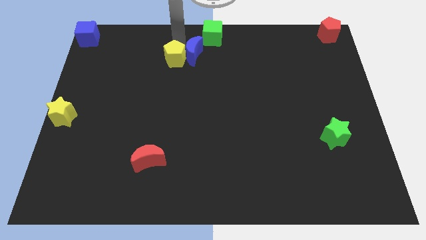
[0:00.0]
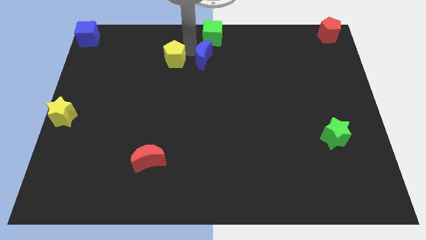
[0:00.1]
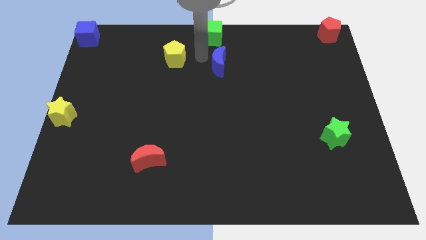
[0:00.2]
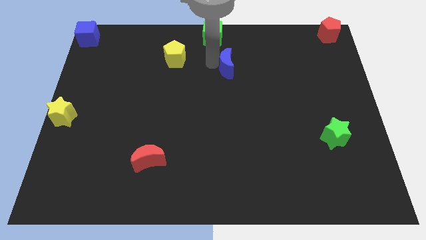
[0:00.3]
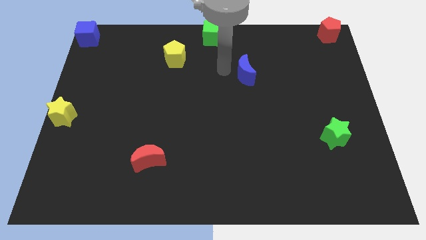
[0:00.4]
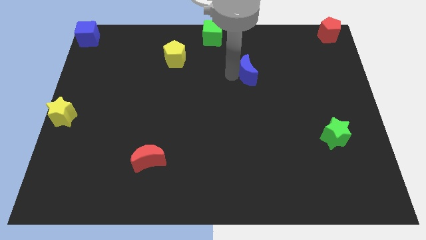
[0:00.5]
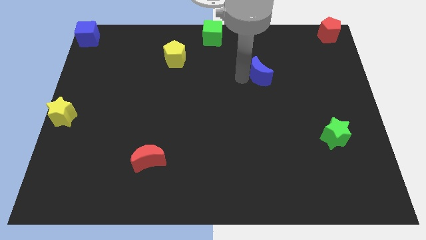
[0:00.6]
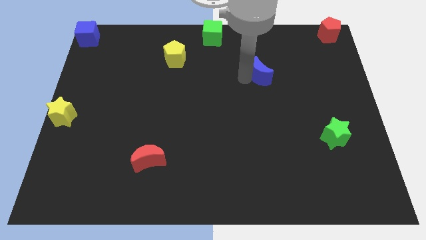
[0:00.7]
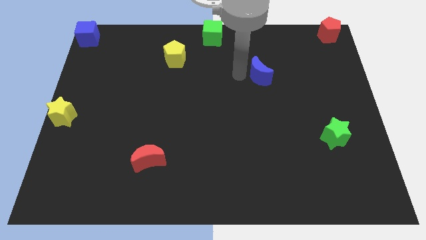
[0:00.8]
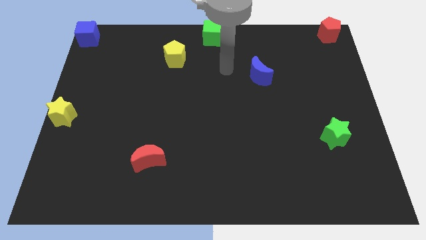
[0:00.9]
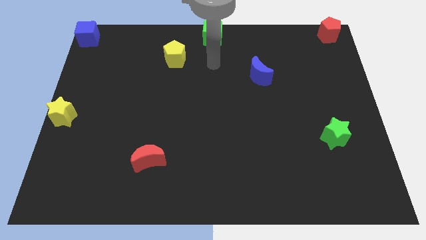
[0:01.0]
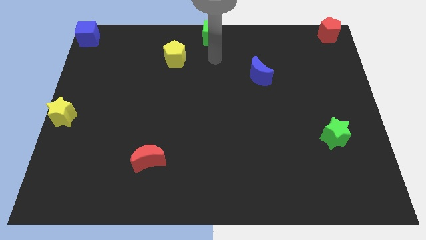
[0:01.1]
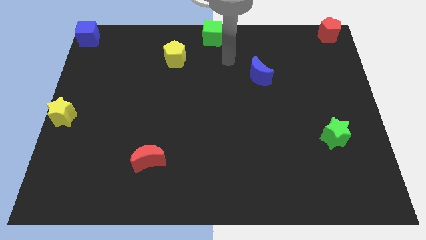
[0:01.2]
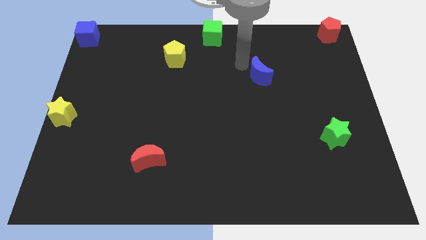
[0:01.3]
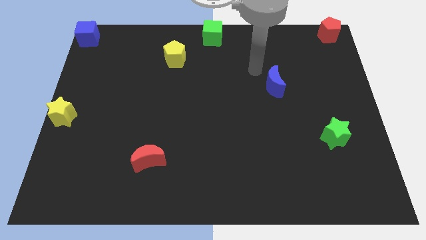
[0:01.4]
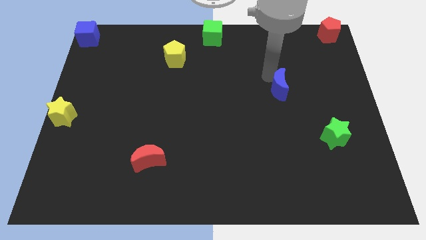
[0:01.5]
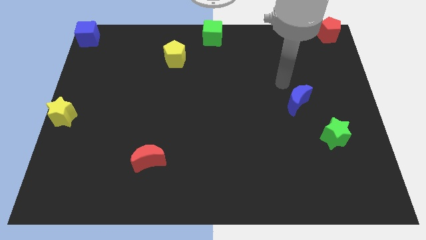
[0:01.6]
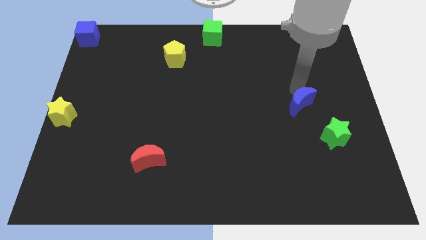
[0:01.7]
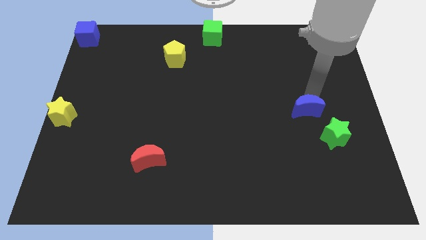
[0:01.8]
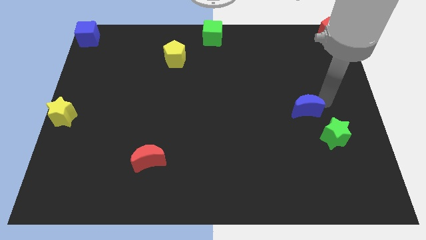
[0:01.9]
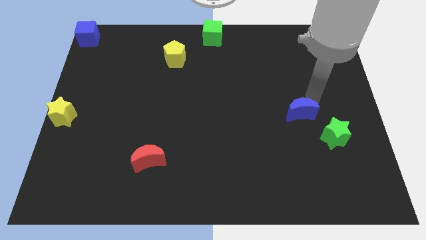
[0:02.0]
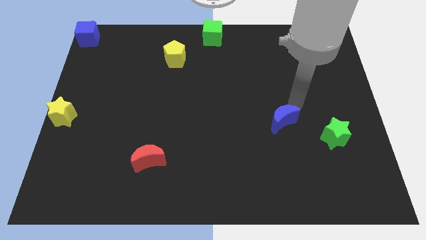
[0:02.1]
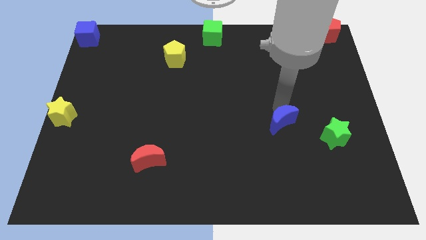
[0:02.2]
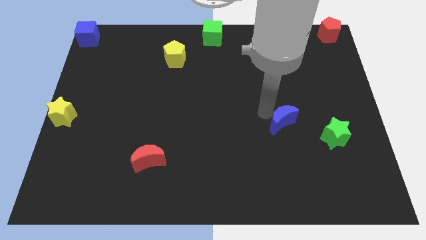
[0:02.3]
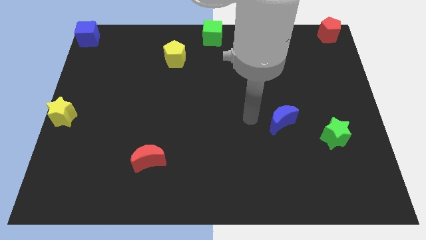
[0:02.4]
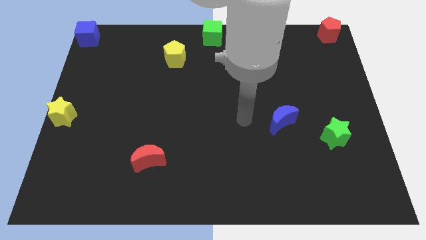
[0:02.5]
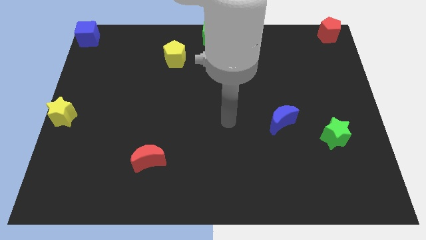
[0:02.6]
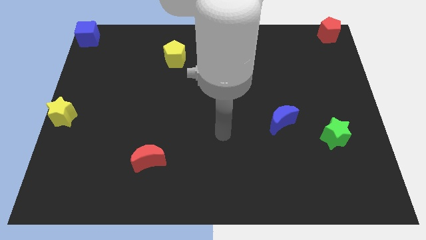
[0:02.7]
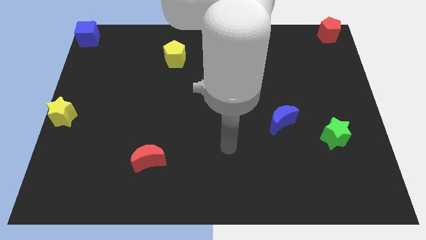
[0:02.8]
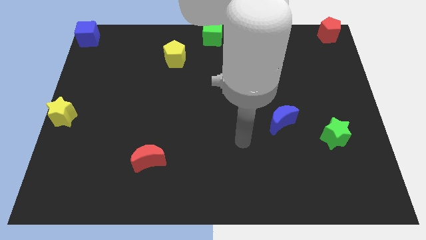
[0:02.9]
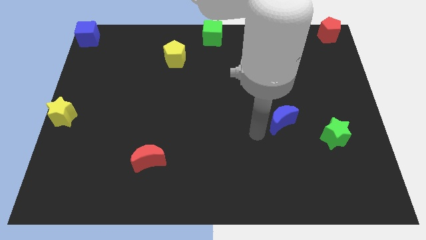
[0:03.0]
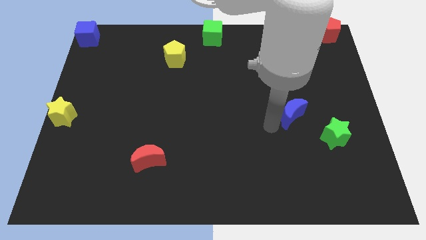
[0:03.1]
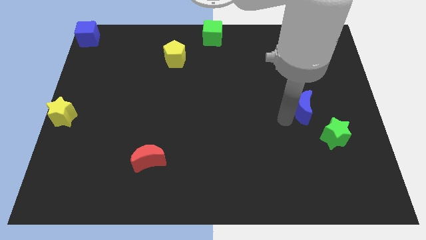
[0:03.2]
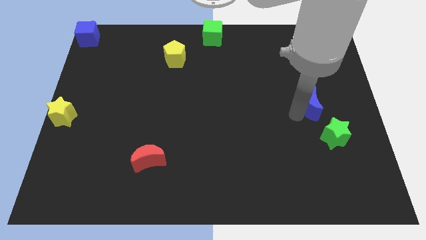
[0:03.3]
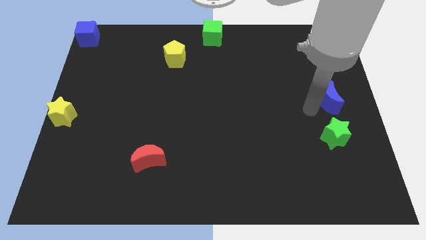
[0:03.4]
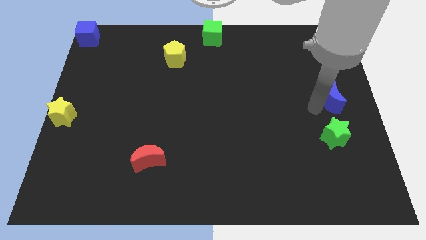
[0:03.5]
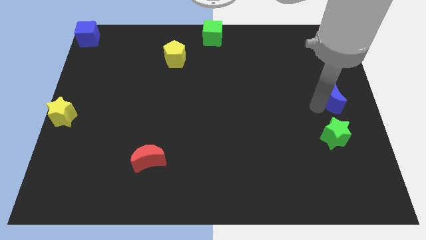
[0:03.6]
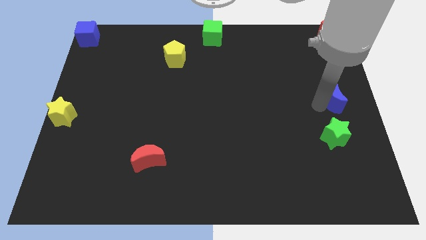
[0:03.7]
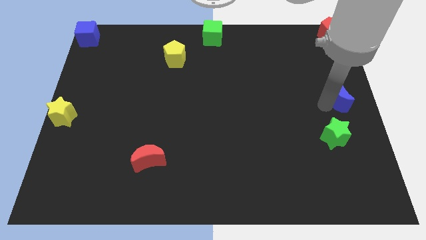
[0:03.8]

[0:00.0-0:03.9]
place the blue moon to the center right

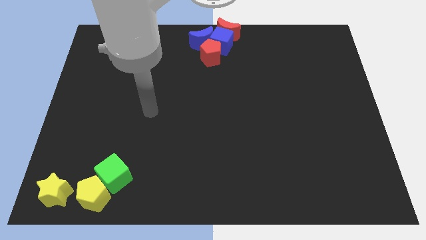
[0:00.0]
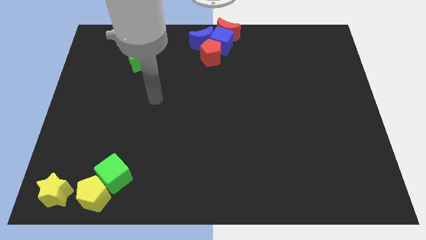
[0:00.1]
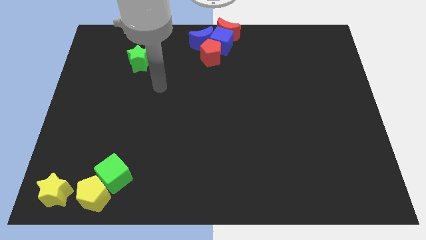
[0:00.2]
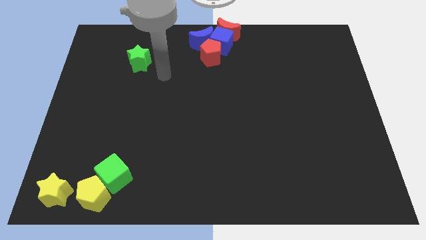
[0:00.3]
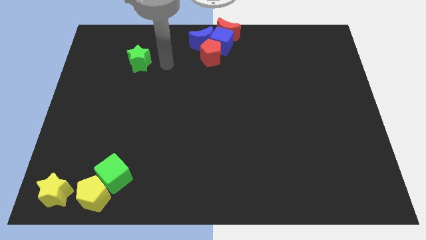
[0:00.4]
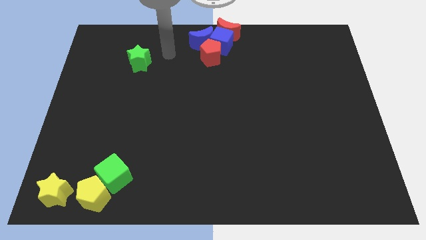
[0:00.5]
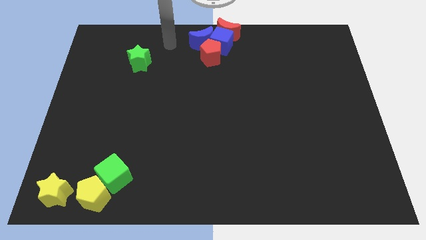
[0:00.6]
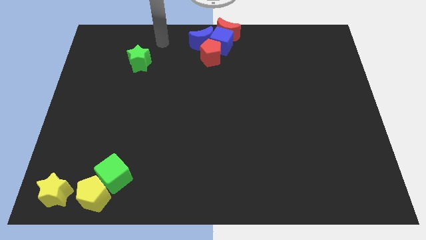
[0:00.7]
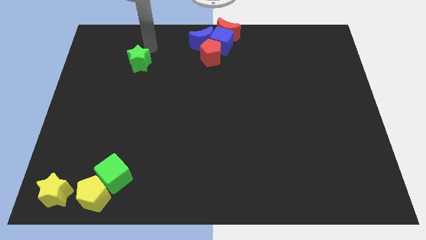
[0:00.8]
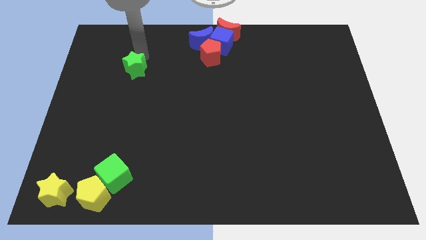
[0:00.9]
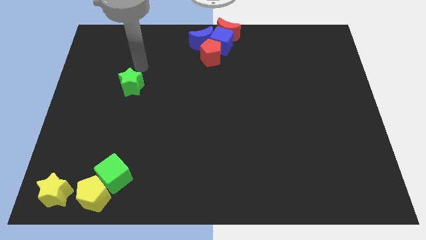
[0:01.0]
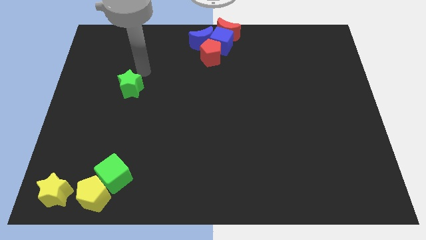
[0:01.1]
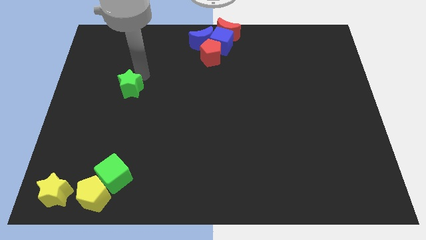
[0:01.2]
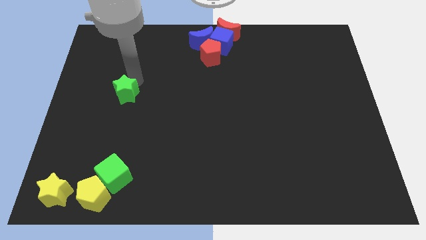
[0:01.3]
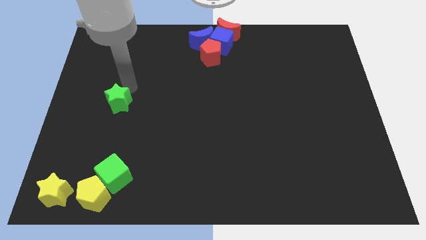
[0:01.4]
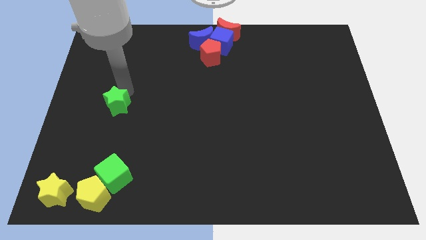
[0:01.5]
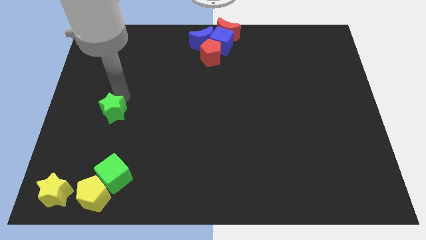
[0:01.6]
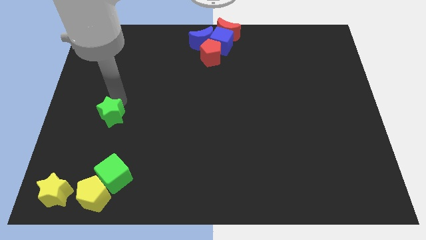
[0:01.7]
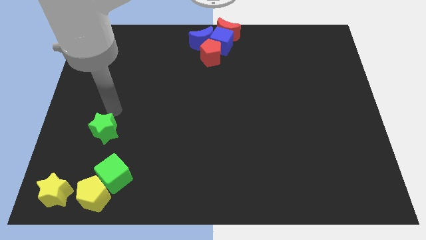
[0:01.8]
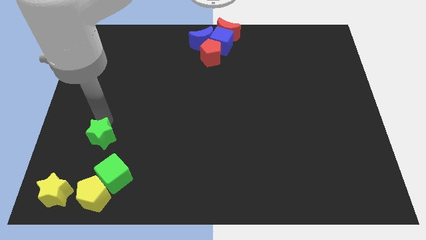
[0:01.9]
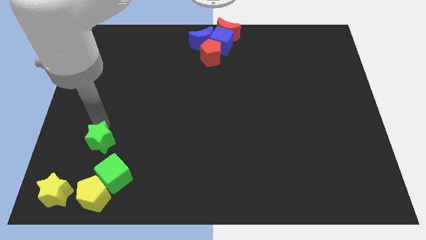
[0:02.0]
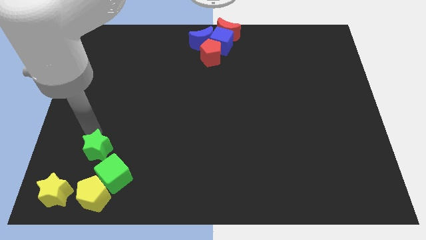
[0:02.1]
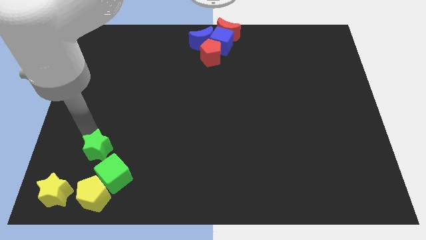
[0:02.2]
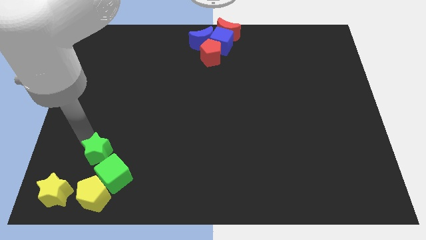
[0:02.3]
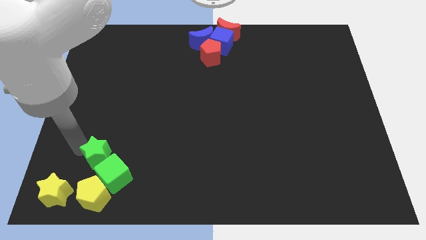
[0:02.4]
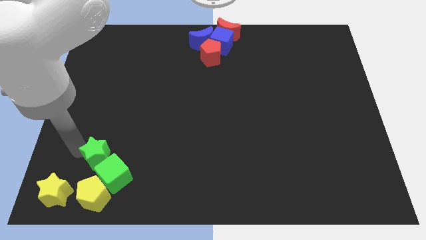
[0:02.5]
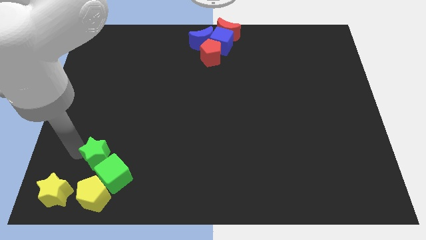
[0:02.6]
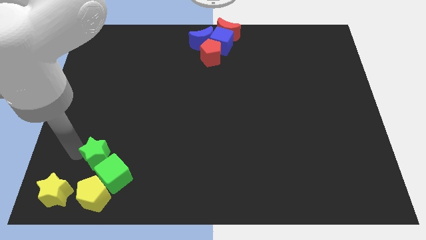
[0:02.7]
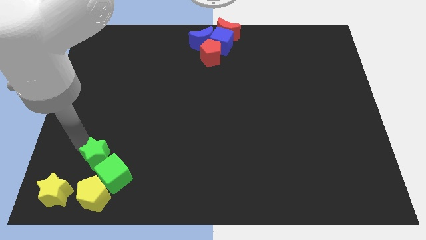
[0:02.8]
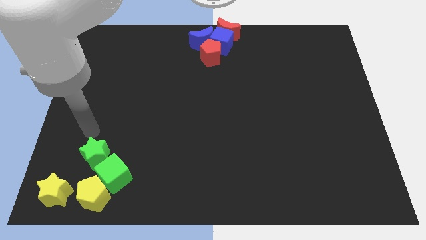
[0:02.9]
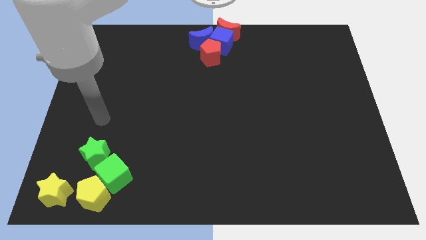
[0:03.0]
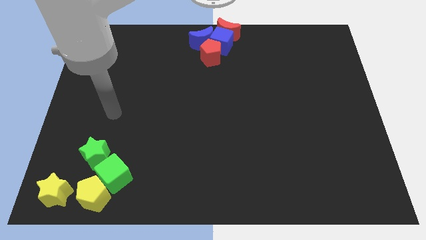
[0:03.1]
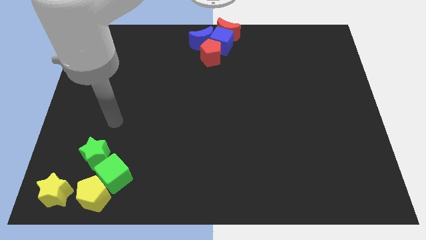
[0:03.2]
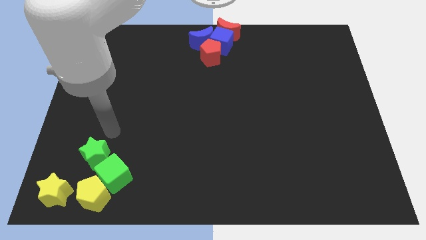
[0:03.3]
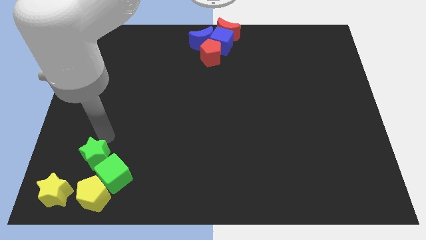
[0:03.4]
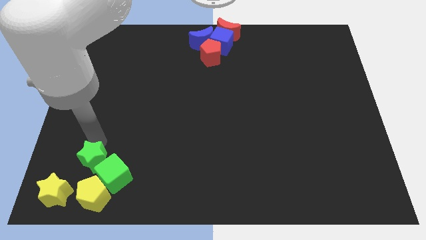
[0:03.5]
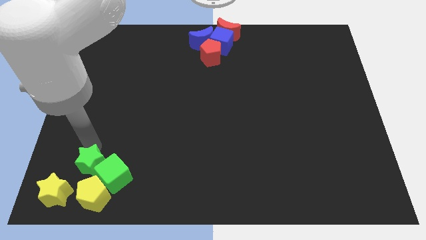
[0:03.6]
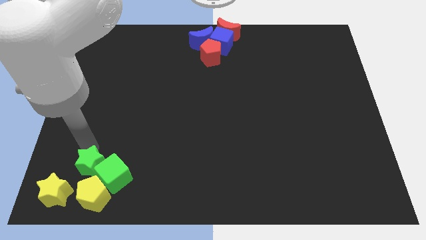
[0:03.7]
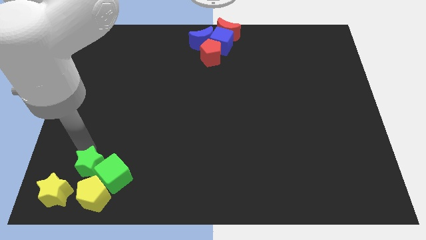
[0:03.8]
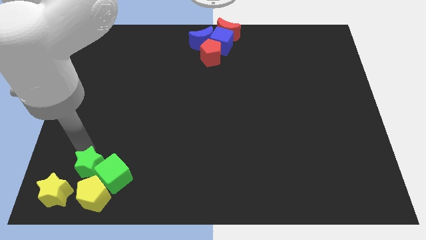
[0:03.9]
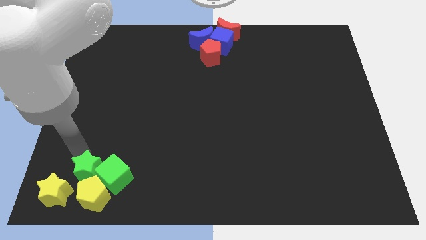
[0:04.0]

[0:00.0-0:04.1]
slide the green star into the group of blocks at the bottom left side of the board

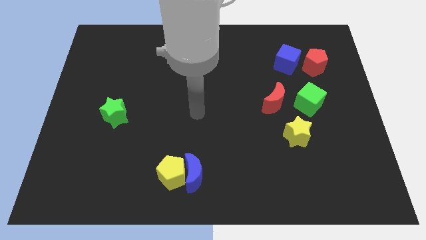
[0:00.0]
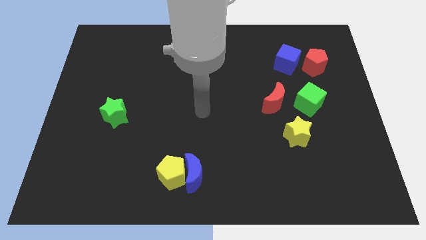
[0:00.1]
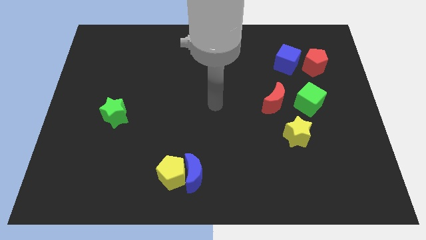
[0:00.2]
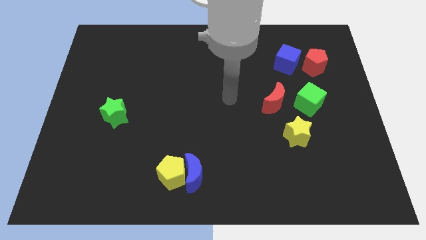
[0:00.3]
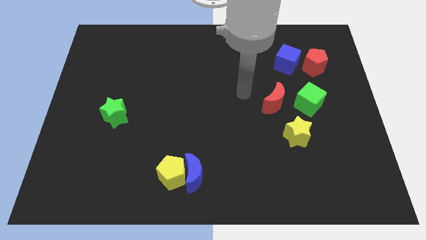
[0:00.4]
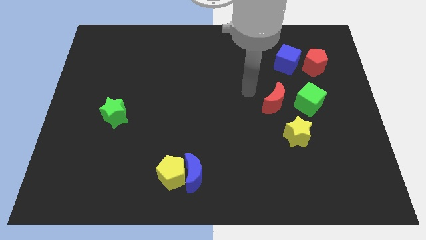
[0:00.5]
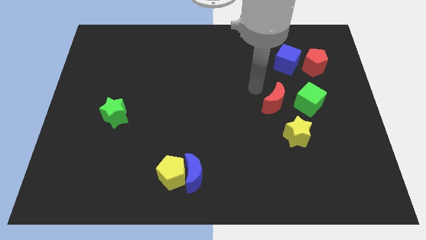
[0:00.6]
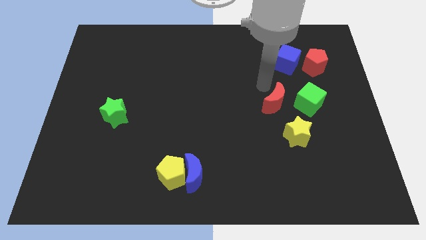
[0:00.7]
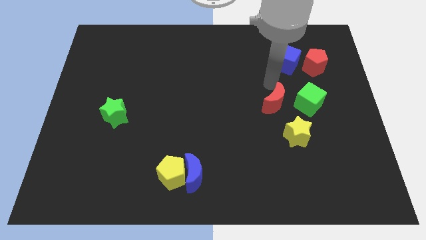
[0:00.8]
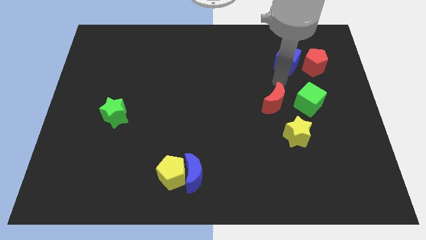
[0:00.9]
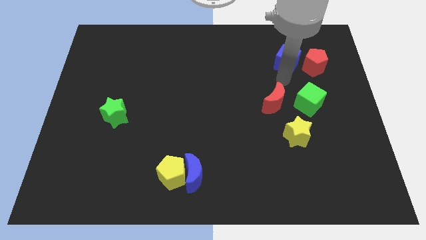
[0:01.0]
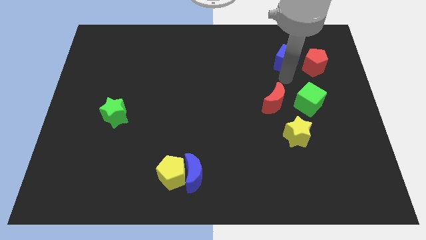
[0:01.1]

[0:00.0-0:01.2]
point your arm in between the red moon and blue cube
